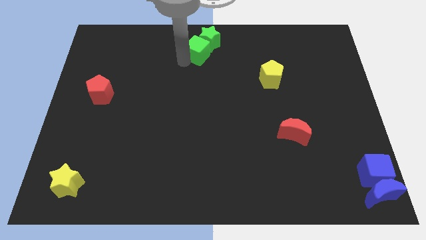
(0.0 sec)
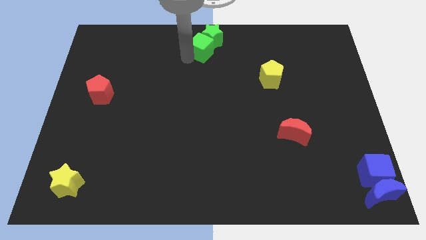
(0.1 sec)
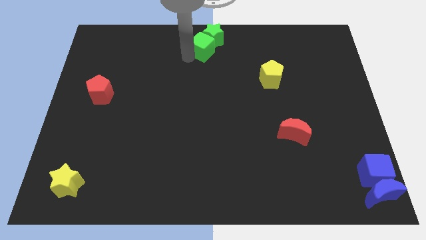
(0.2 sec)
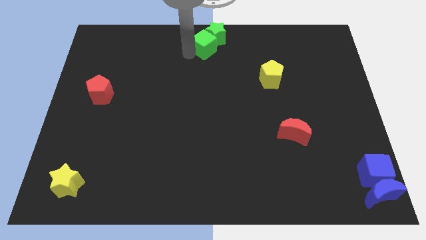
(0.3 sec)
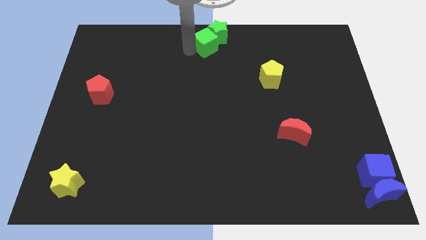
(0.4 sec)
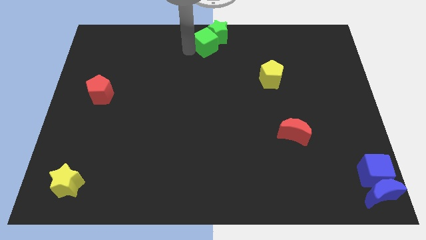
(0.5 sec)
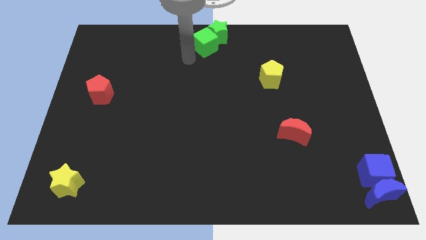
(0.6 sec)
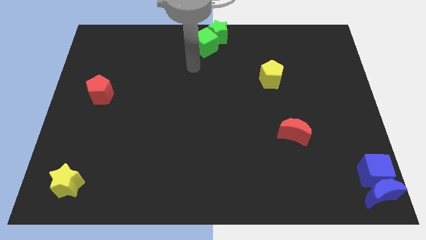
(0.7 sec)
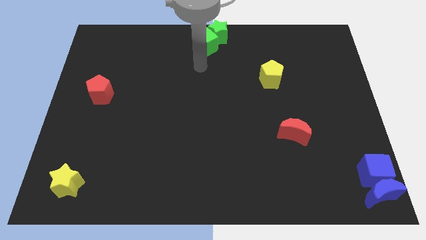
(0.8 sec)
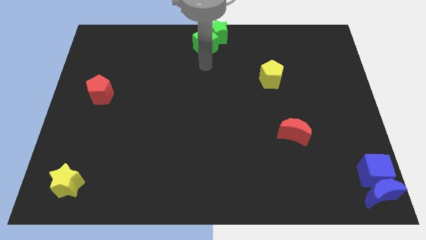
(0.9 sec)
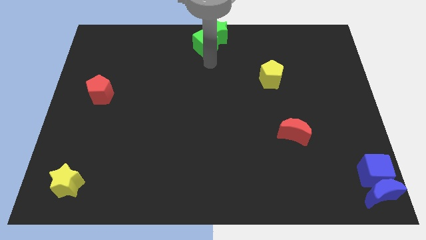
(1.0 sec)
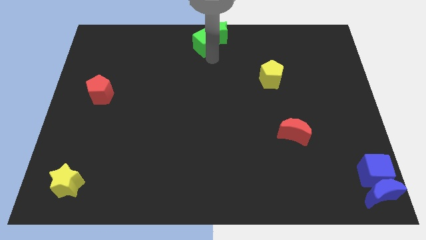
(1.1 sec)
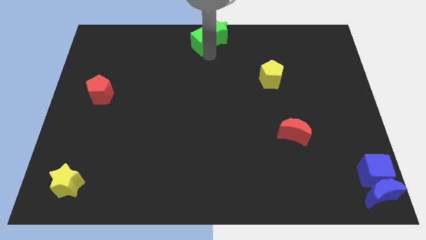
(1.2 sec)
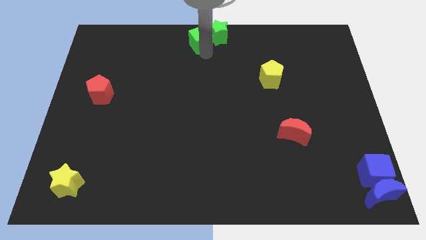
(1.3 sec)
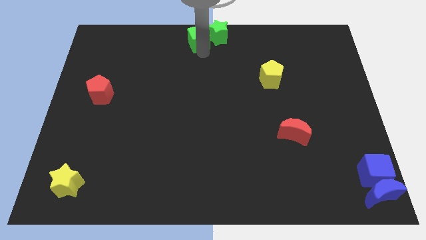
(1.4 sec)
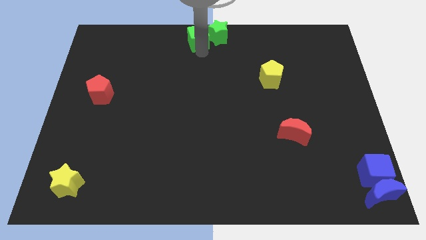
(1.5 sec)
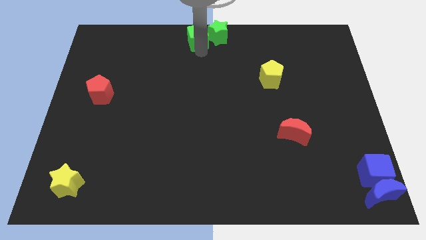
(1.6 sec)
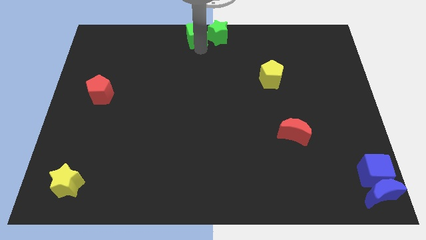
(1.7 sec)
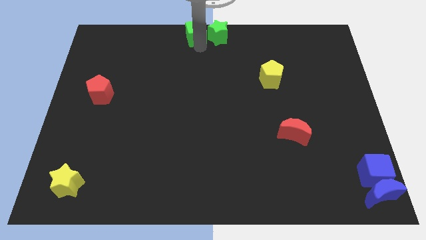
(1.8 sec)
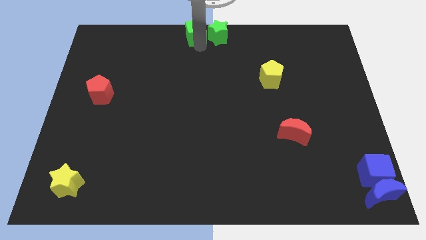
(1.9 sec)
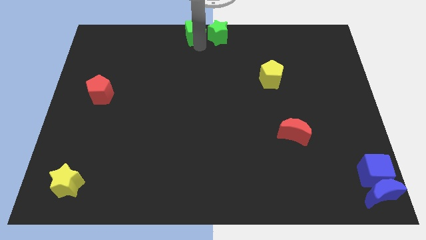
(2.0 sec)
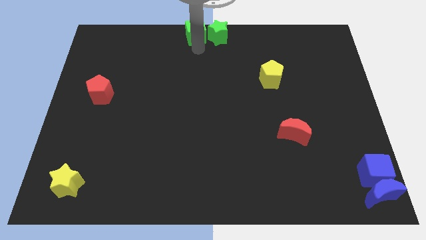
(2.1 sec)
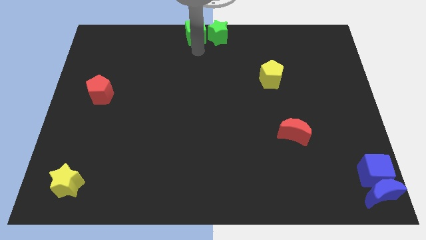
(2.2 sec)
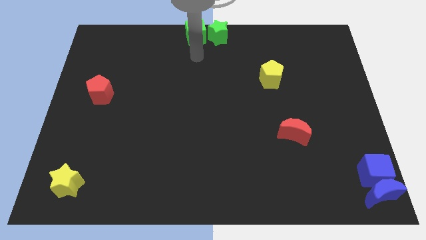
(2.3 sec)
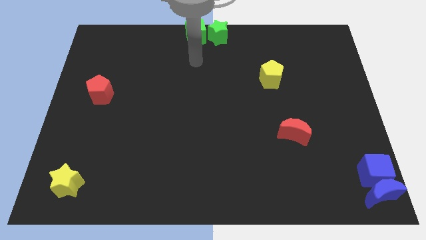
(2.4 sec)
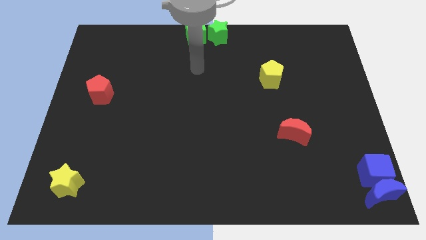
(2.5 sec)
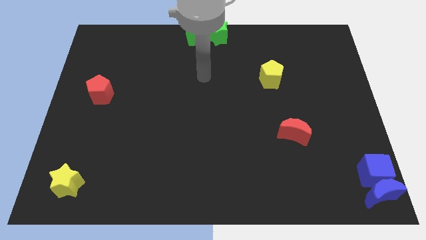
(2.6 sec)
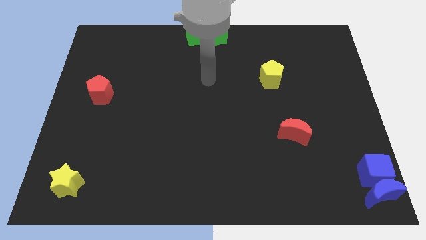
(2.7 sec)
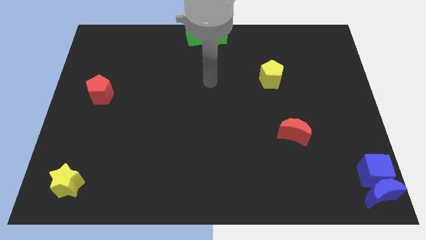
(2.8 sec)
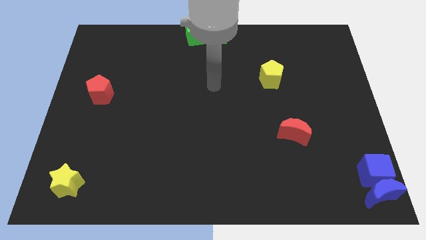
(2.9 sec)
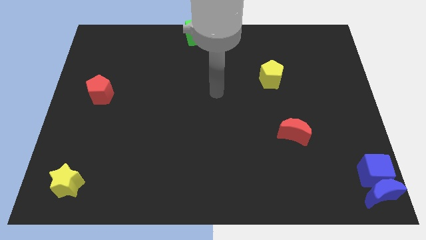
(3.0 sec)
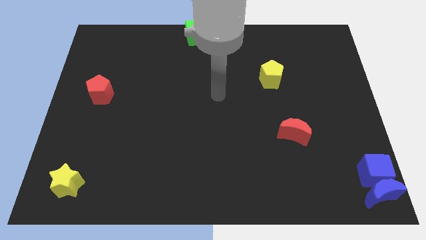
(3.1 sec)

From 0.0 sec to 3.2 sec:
place the green cube left to the green star

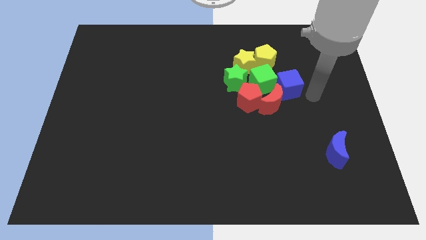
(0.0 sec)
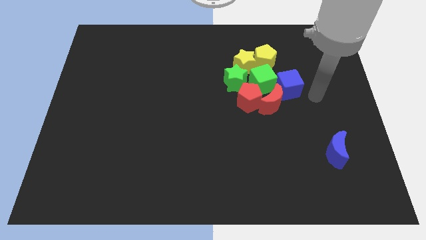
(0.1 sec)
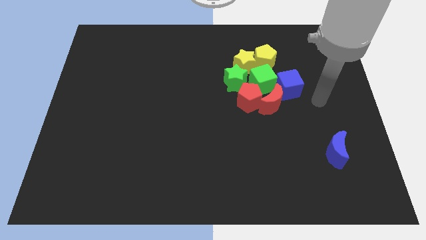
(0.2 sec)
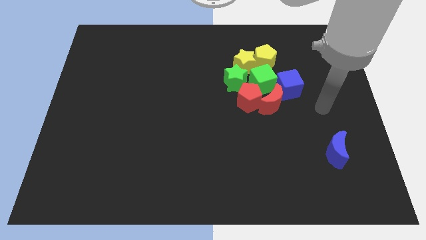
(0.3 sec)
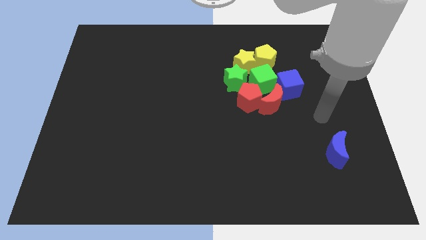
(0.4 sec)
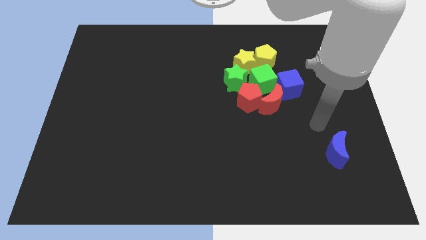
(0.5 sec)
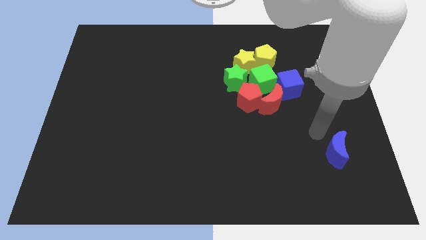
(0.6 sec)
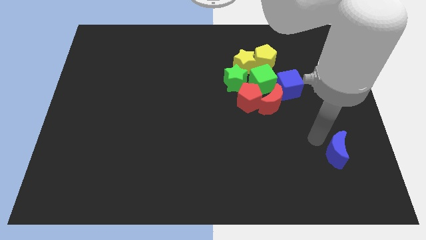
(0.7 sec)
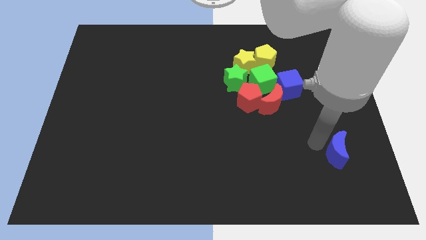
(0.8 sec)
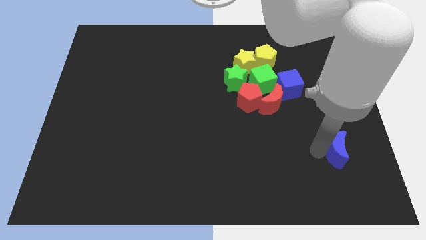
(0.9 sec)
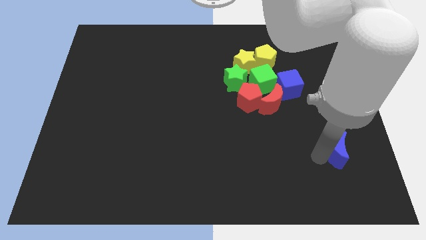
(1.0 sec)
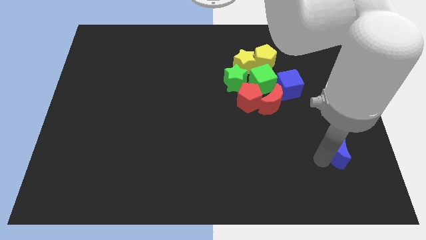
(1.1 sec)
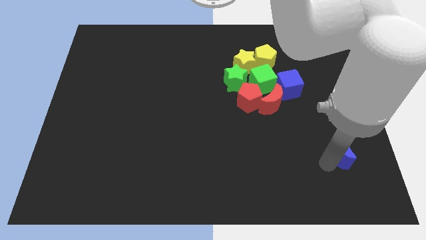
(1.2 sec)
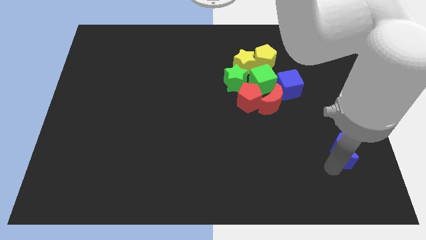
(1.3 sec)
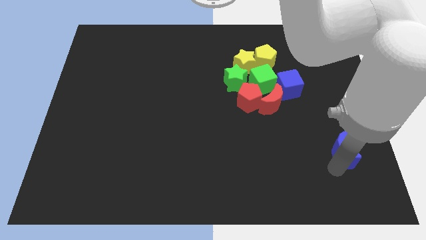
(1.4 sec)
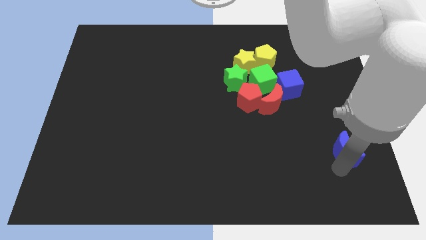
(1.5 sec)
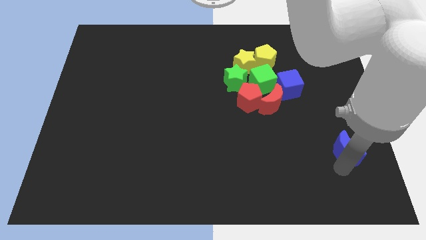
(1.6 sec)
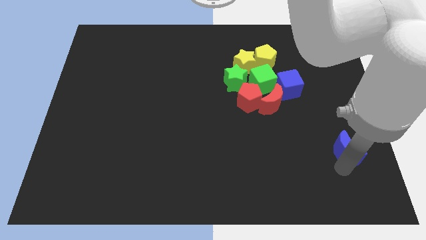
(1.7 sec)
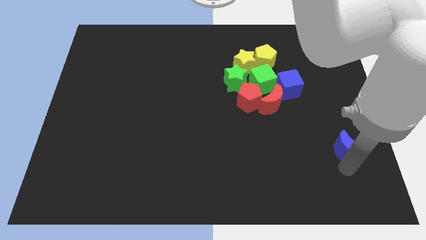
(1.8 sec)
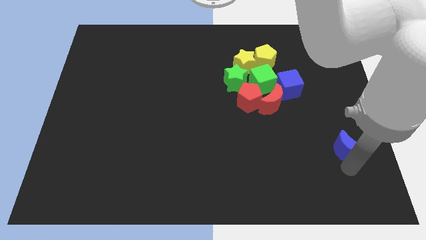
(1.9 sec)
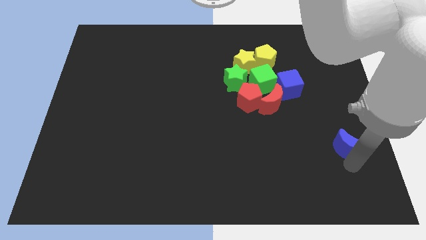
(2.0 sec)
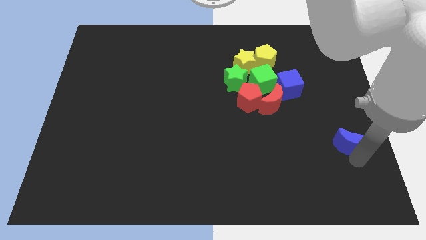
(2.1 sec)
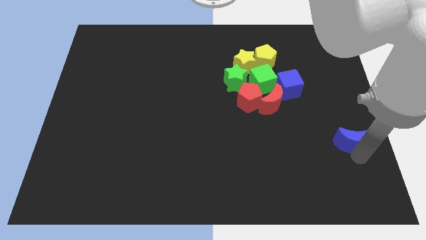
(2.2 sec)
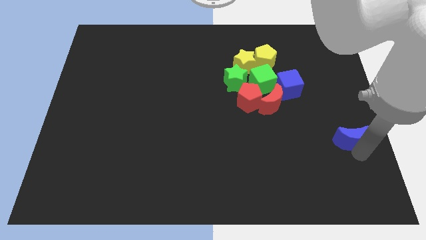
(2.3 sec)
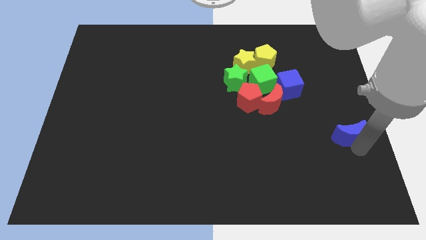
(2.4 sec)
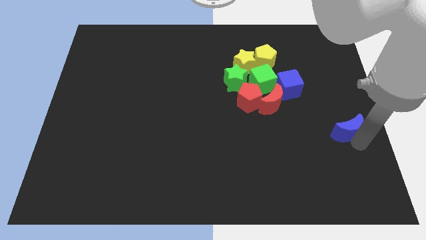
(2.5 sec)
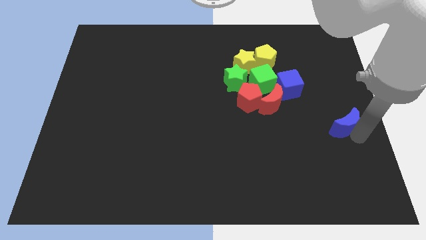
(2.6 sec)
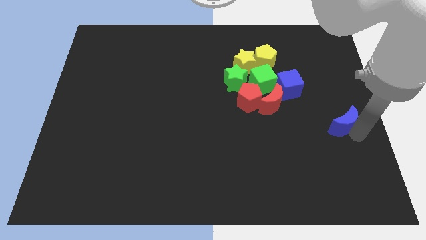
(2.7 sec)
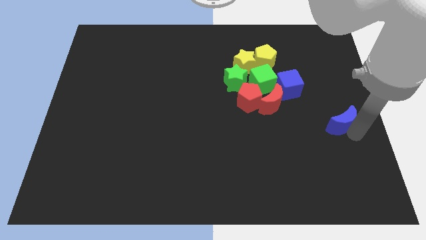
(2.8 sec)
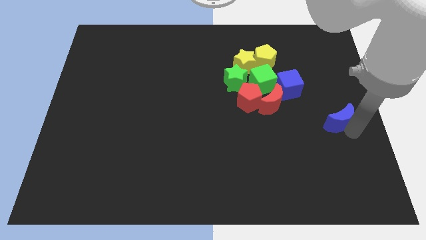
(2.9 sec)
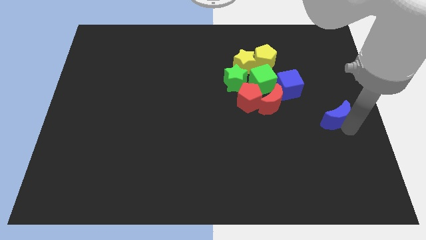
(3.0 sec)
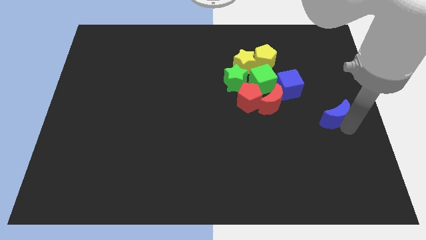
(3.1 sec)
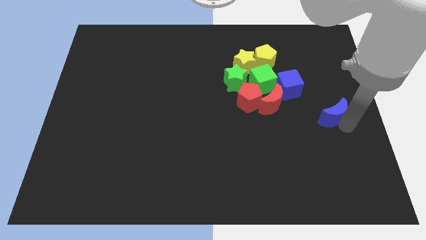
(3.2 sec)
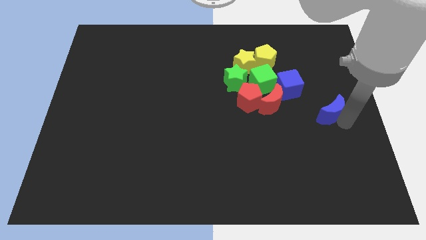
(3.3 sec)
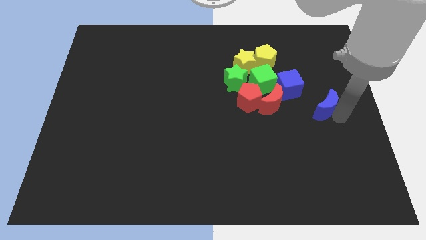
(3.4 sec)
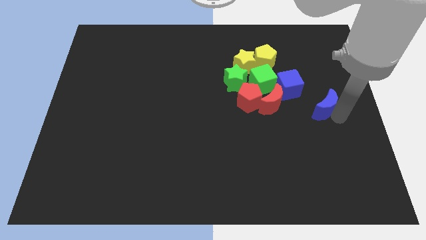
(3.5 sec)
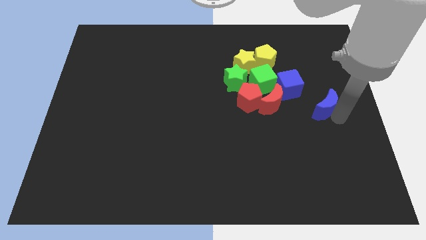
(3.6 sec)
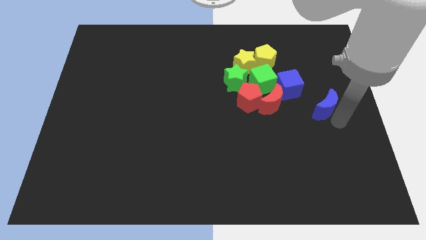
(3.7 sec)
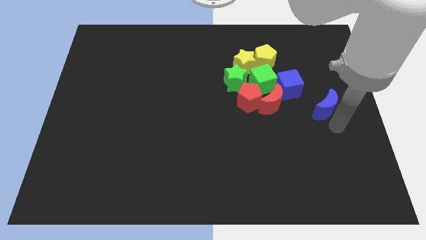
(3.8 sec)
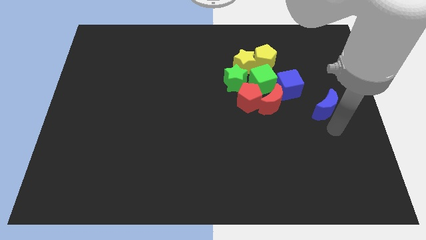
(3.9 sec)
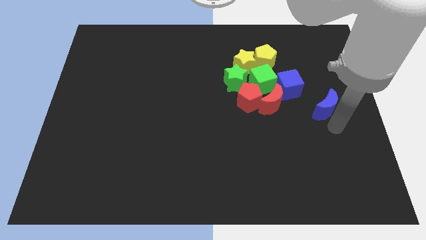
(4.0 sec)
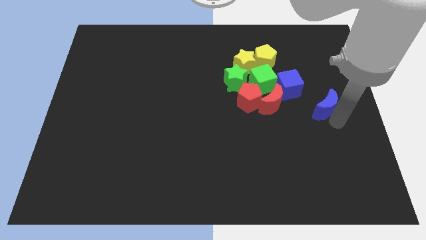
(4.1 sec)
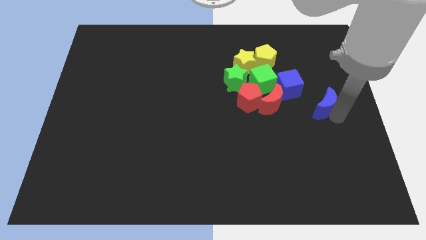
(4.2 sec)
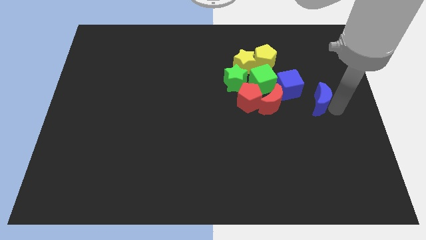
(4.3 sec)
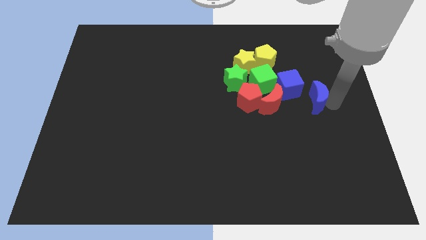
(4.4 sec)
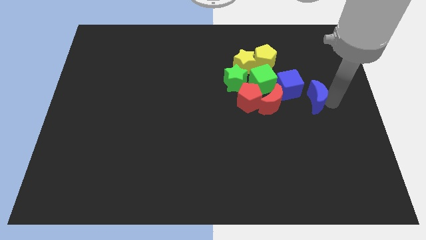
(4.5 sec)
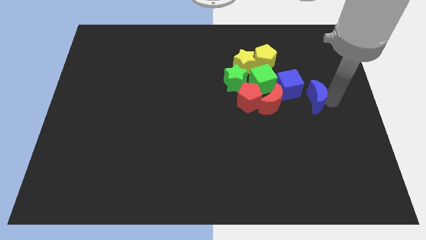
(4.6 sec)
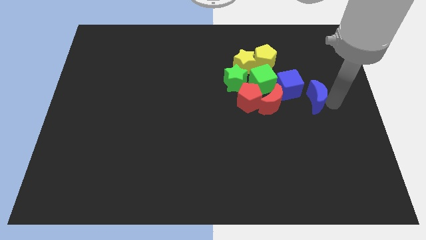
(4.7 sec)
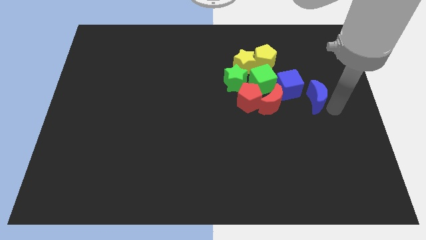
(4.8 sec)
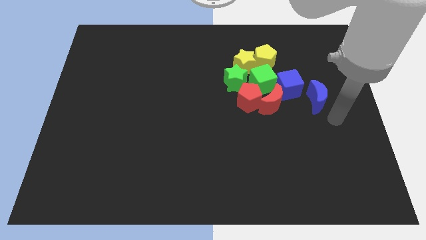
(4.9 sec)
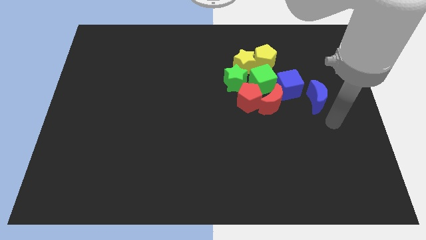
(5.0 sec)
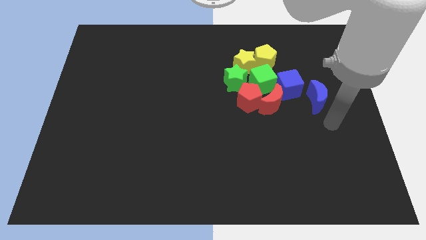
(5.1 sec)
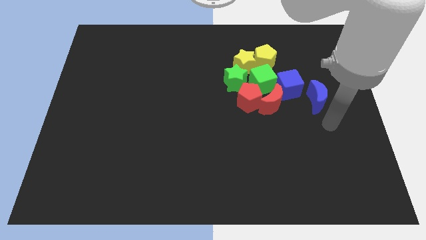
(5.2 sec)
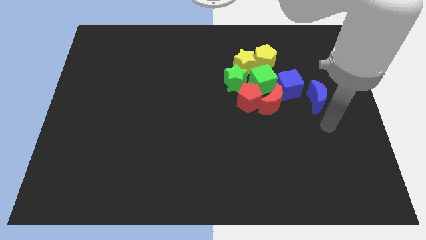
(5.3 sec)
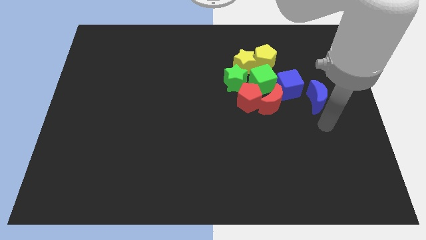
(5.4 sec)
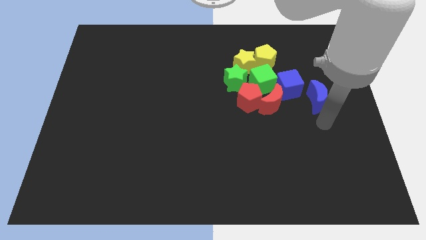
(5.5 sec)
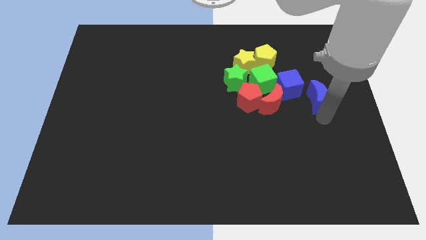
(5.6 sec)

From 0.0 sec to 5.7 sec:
push the blue crescent to the top of the board

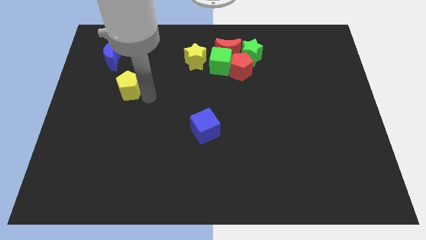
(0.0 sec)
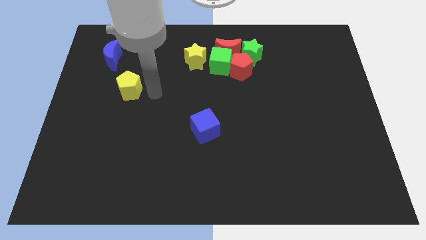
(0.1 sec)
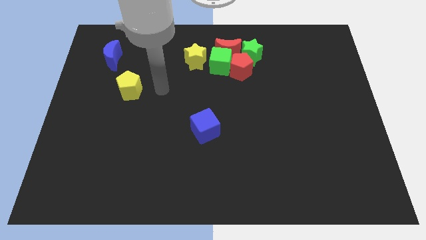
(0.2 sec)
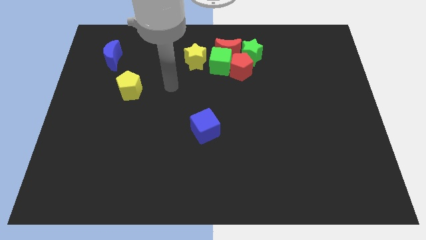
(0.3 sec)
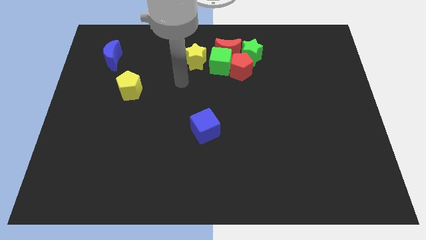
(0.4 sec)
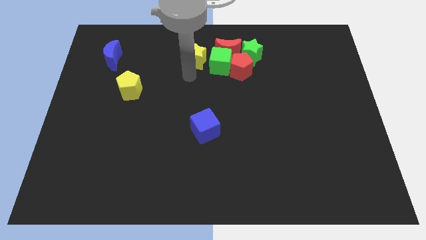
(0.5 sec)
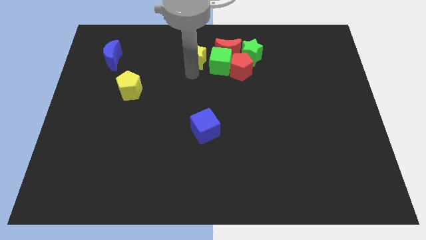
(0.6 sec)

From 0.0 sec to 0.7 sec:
put your arm at the bottom of yellow star
